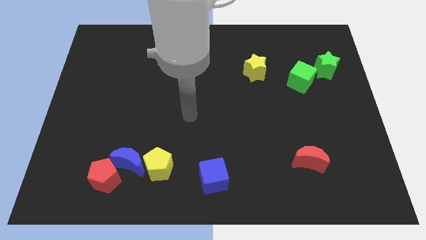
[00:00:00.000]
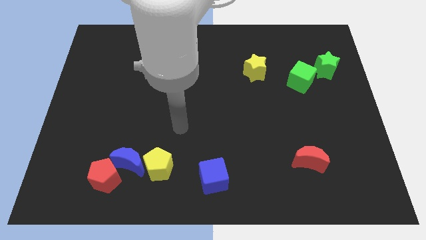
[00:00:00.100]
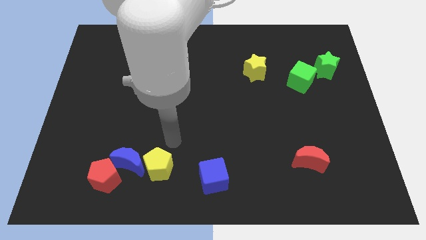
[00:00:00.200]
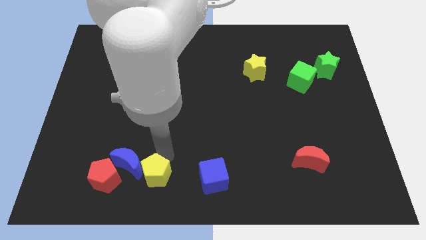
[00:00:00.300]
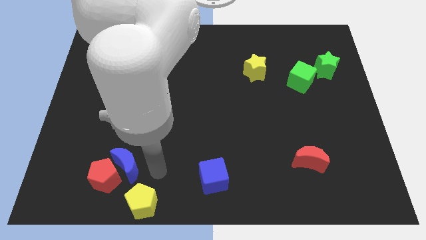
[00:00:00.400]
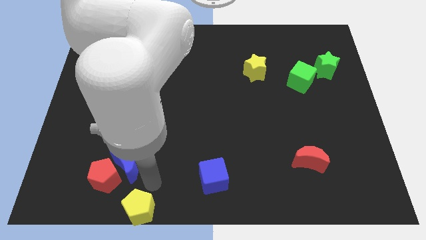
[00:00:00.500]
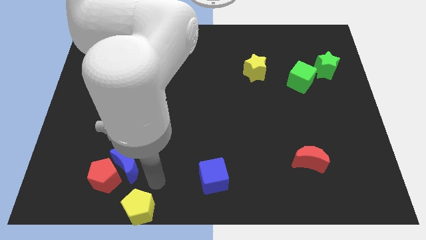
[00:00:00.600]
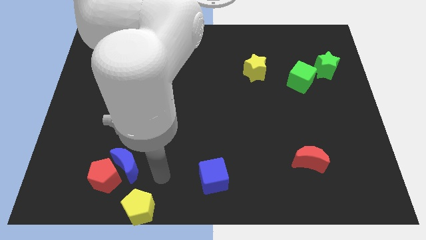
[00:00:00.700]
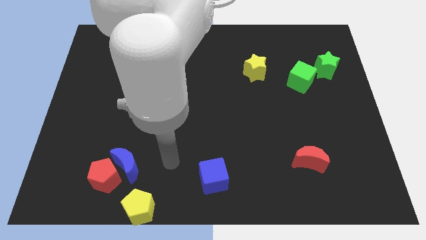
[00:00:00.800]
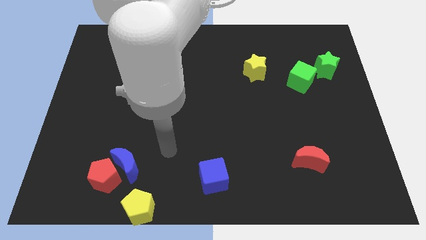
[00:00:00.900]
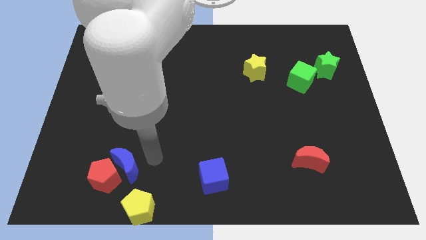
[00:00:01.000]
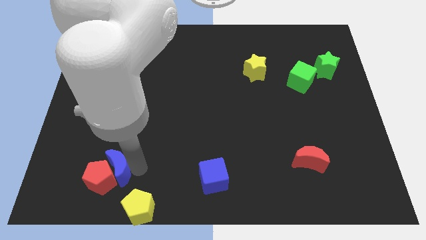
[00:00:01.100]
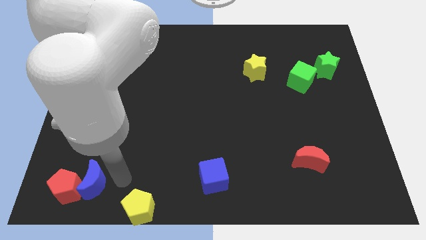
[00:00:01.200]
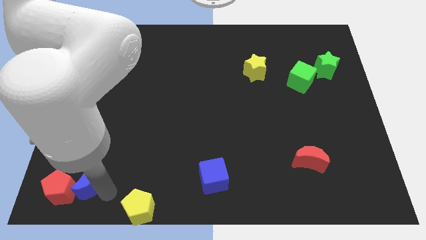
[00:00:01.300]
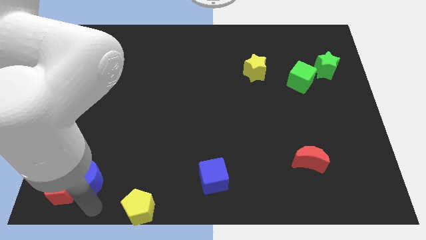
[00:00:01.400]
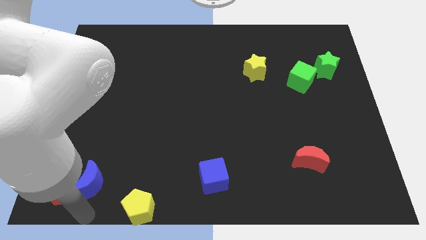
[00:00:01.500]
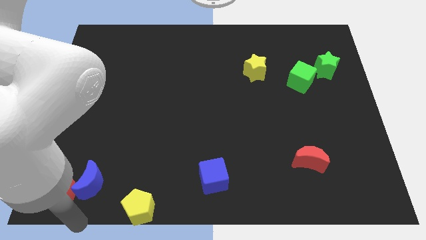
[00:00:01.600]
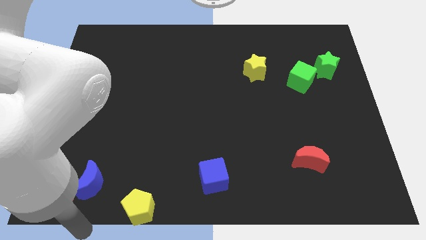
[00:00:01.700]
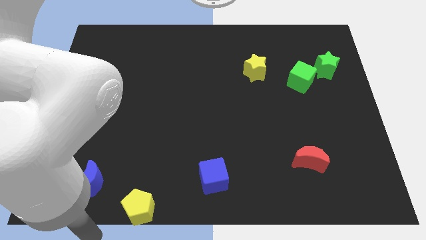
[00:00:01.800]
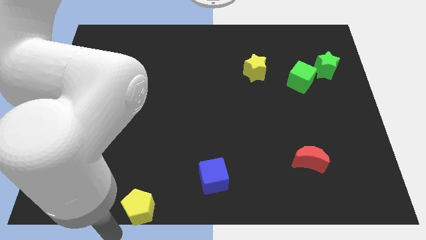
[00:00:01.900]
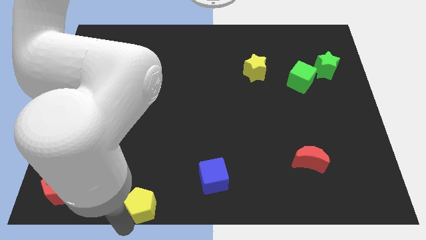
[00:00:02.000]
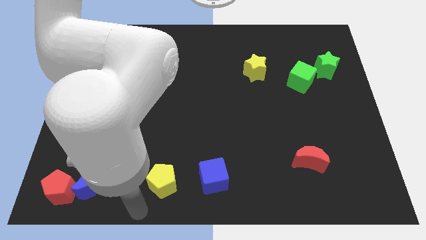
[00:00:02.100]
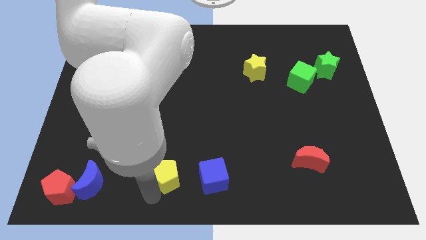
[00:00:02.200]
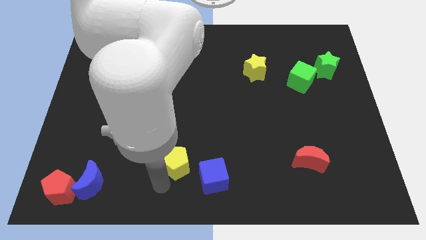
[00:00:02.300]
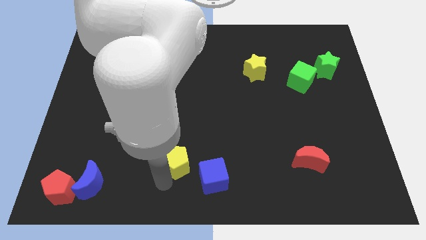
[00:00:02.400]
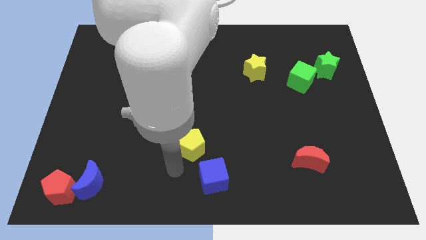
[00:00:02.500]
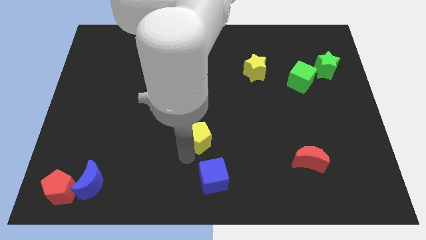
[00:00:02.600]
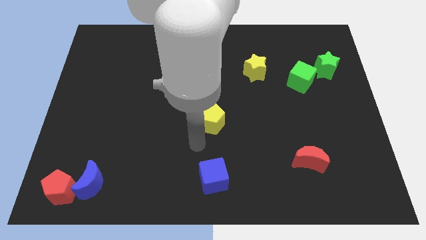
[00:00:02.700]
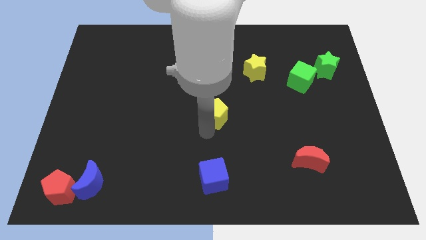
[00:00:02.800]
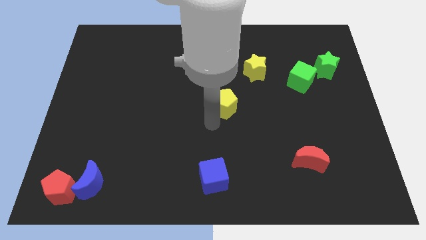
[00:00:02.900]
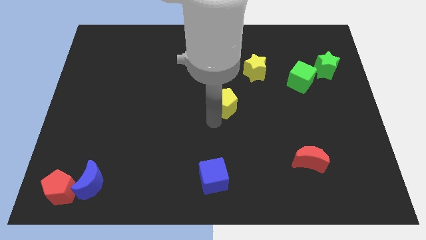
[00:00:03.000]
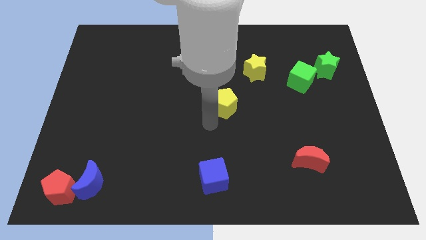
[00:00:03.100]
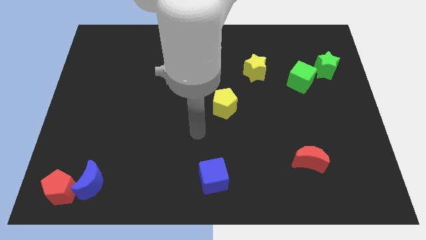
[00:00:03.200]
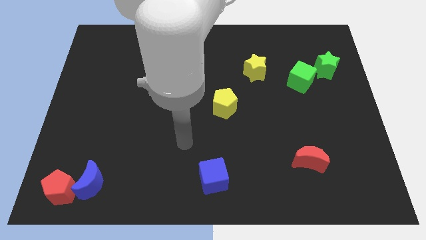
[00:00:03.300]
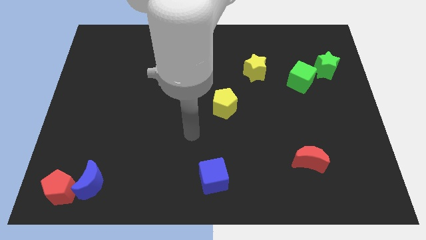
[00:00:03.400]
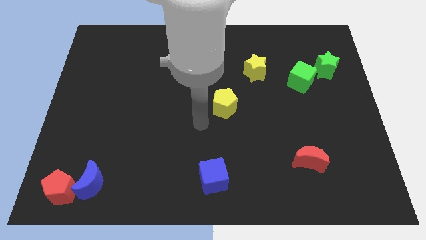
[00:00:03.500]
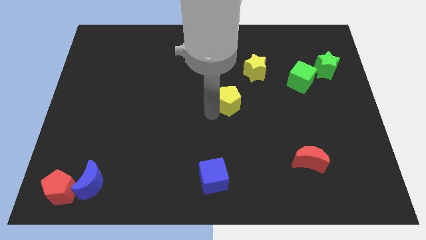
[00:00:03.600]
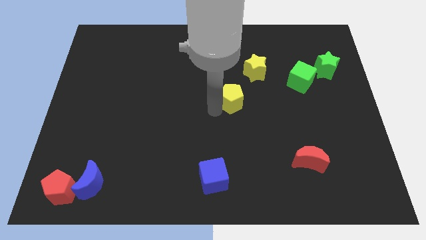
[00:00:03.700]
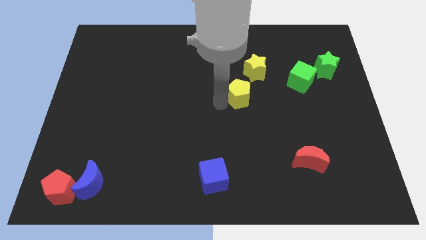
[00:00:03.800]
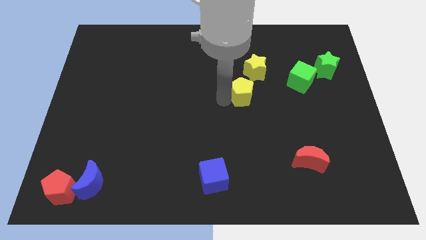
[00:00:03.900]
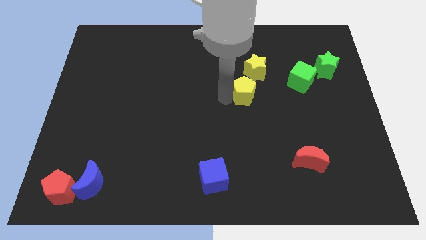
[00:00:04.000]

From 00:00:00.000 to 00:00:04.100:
drag blue moon and red pentagon towards left and push yellow pentagon near yellow star

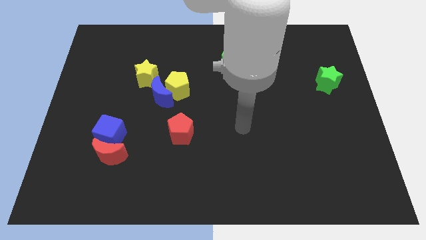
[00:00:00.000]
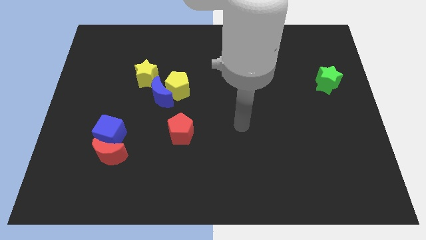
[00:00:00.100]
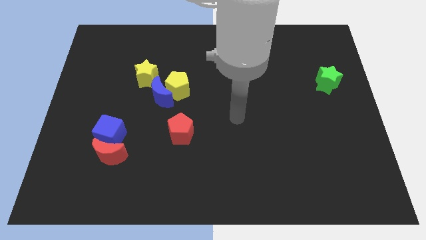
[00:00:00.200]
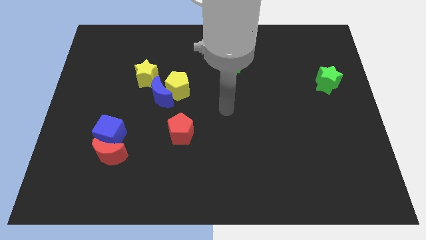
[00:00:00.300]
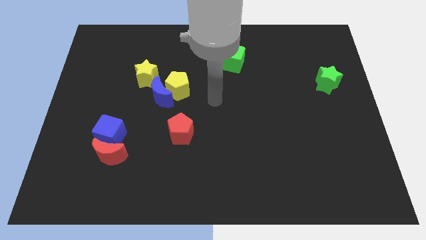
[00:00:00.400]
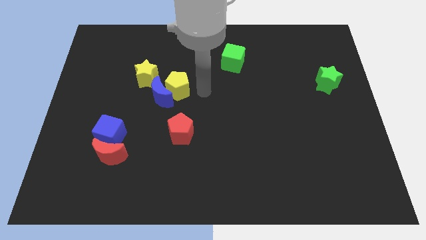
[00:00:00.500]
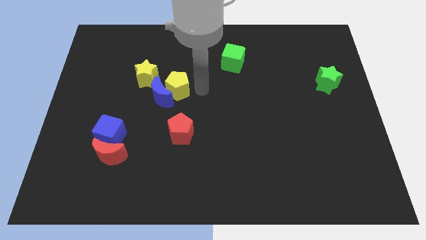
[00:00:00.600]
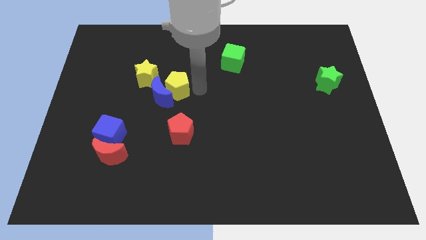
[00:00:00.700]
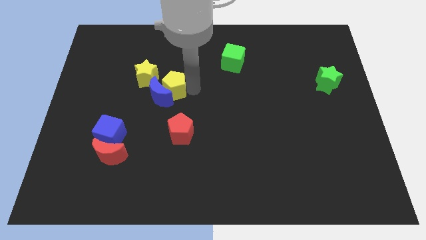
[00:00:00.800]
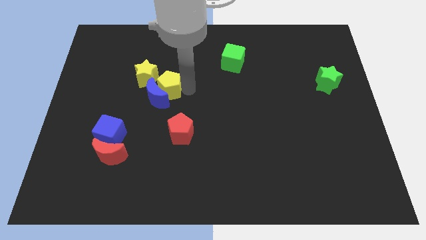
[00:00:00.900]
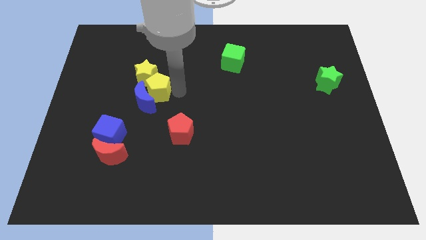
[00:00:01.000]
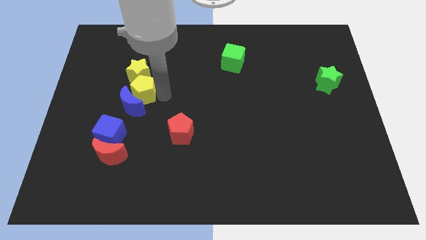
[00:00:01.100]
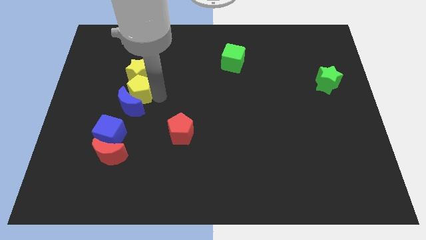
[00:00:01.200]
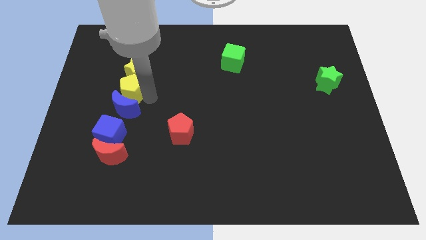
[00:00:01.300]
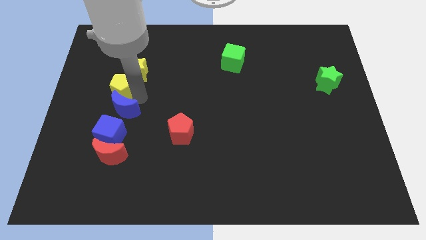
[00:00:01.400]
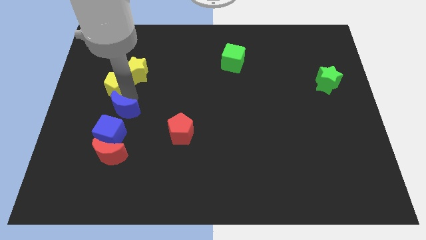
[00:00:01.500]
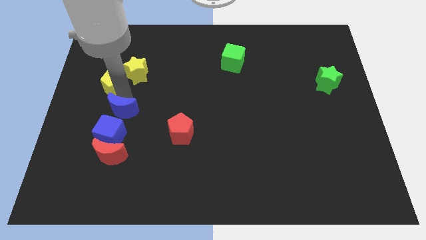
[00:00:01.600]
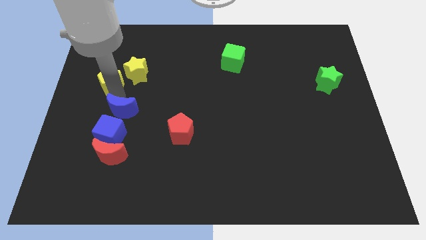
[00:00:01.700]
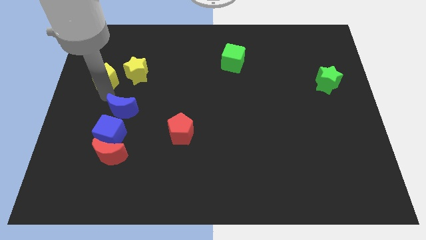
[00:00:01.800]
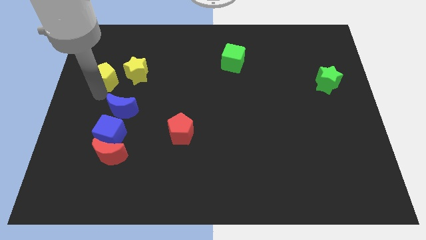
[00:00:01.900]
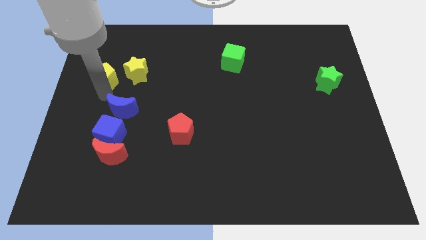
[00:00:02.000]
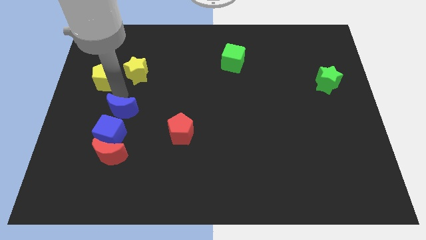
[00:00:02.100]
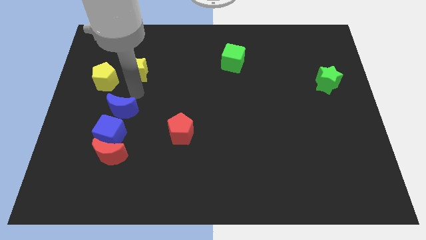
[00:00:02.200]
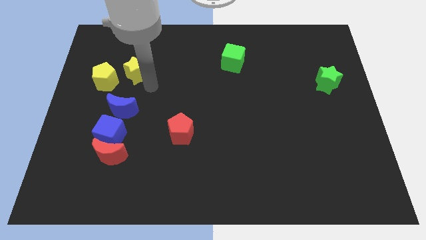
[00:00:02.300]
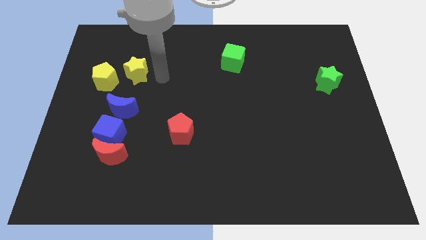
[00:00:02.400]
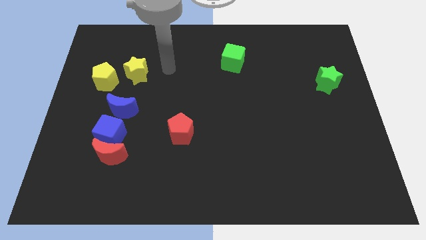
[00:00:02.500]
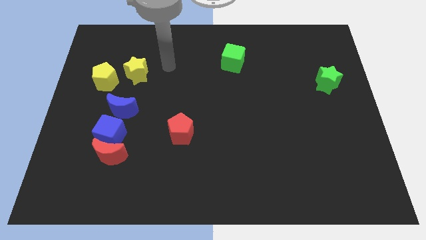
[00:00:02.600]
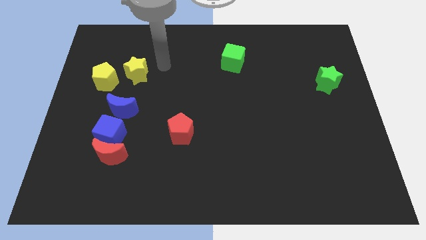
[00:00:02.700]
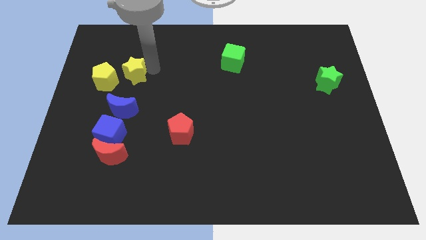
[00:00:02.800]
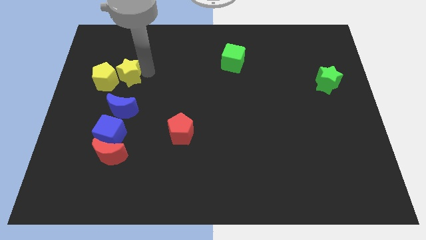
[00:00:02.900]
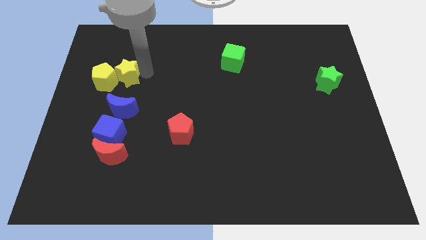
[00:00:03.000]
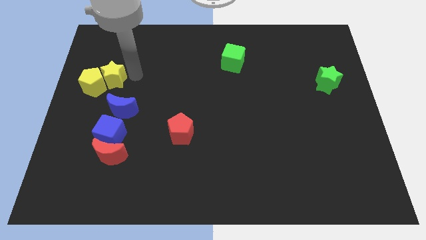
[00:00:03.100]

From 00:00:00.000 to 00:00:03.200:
separate the blue moon and yellow pentagon

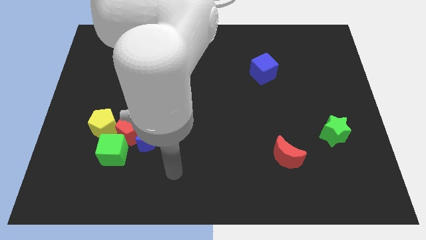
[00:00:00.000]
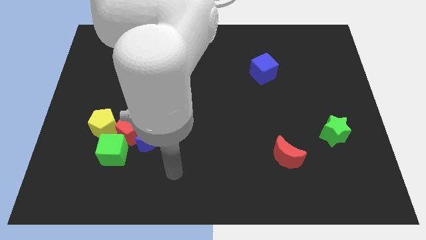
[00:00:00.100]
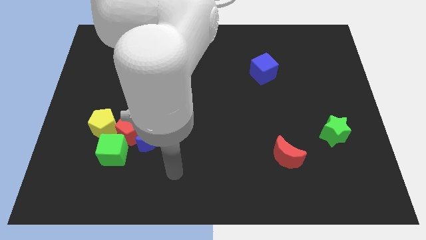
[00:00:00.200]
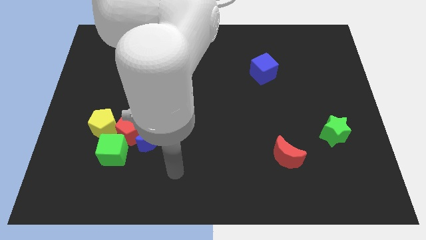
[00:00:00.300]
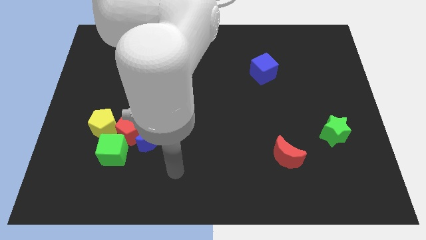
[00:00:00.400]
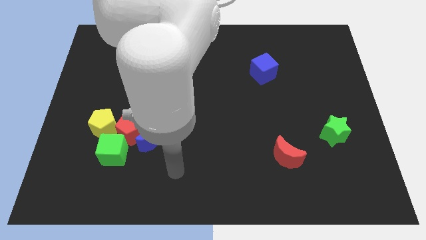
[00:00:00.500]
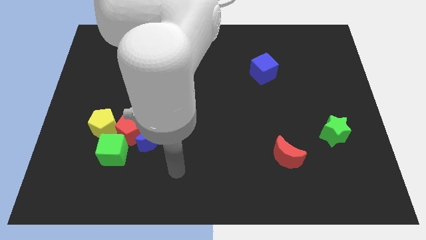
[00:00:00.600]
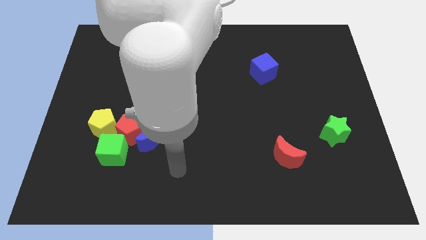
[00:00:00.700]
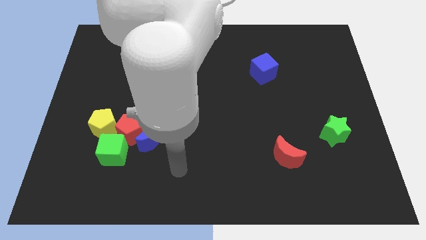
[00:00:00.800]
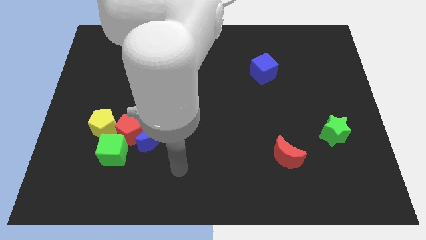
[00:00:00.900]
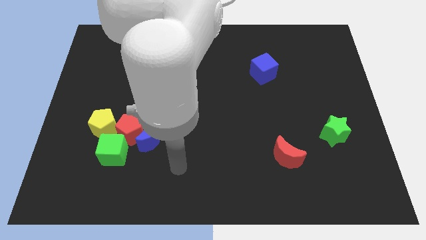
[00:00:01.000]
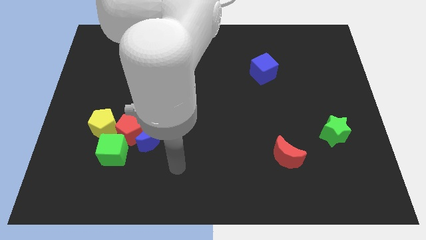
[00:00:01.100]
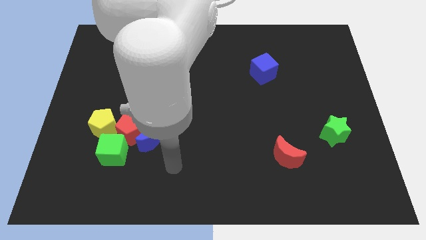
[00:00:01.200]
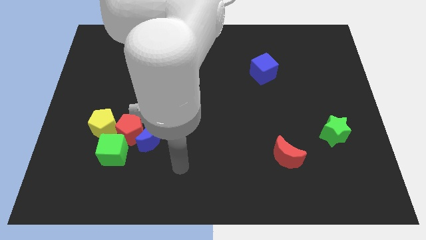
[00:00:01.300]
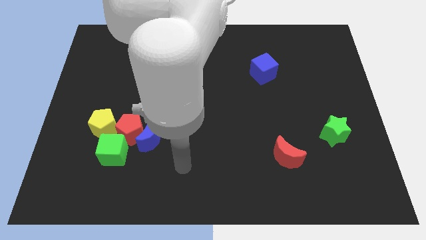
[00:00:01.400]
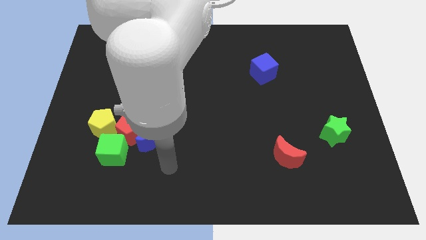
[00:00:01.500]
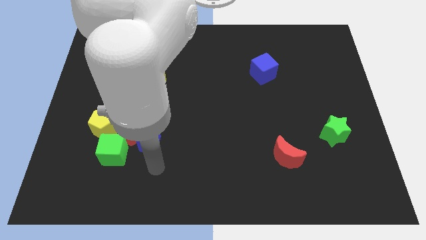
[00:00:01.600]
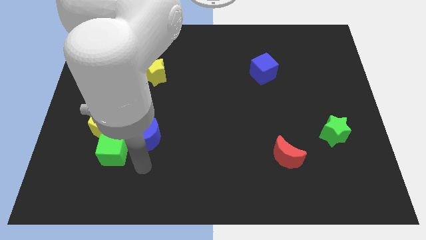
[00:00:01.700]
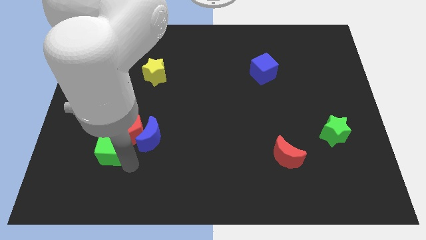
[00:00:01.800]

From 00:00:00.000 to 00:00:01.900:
tap the bottom right of the green cube
